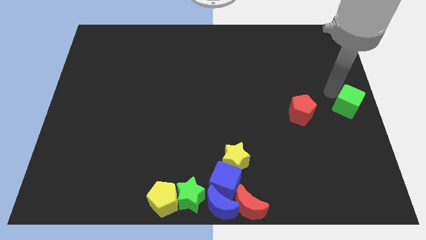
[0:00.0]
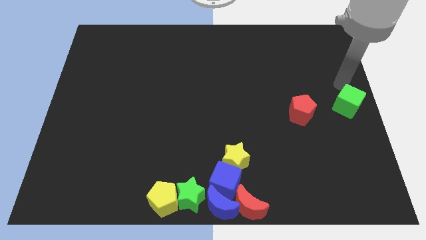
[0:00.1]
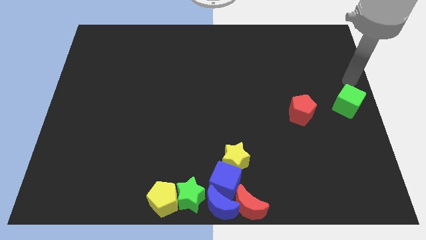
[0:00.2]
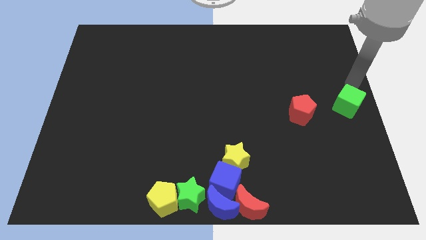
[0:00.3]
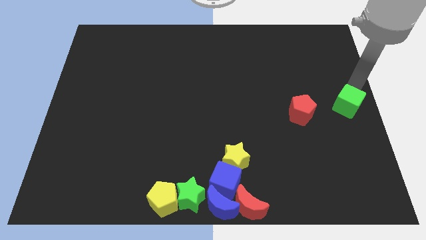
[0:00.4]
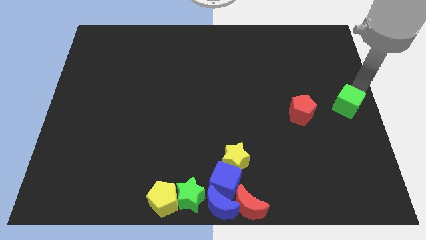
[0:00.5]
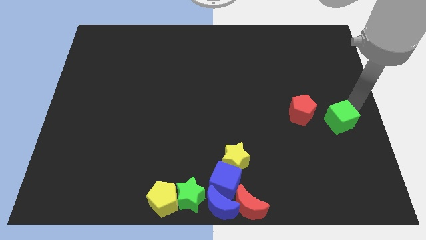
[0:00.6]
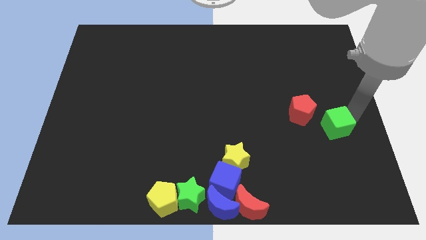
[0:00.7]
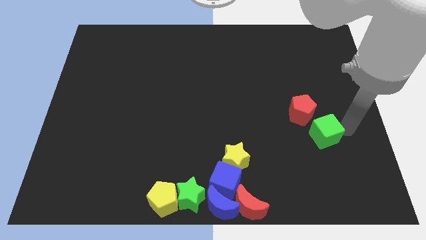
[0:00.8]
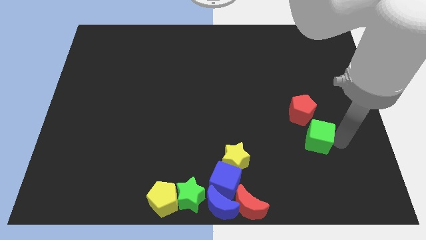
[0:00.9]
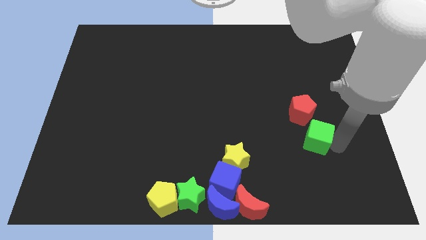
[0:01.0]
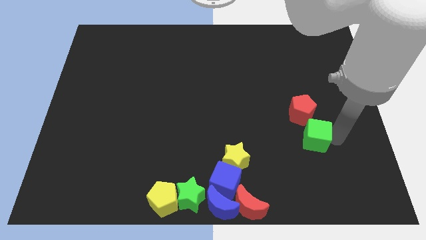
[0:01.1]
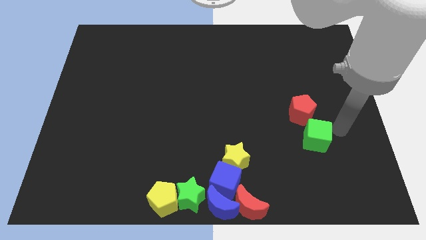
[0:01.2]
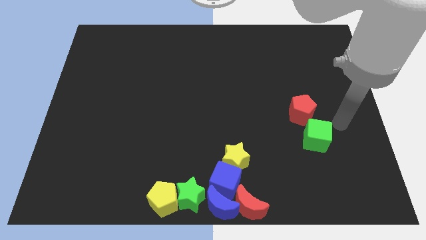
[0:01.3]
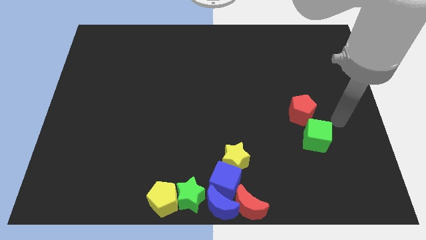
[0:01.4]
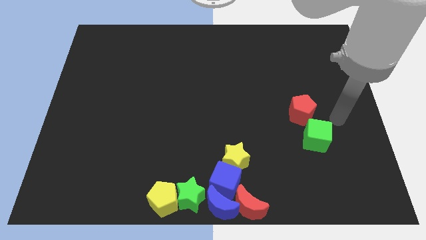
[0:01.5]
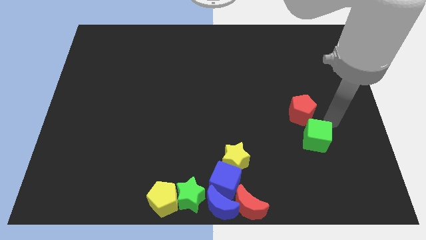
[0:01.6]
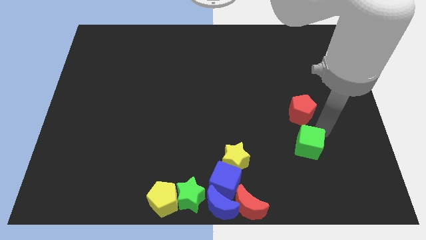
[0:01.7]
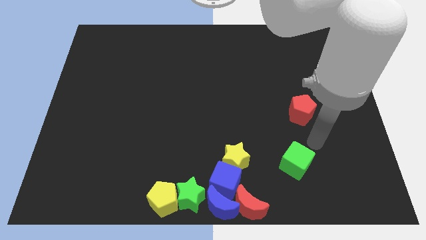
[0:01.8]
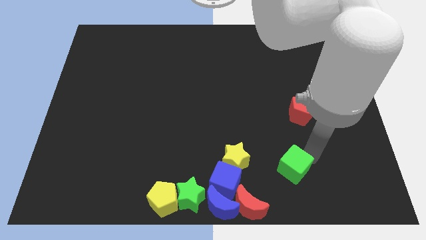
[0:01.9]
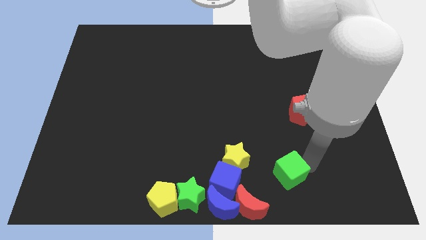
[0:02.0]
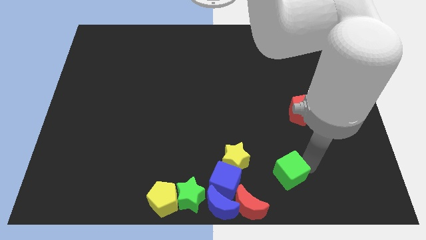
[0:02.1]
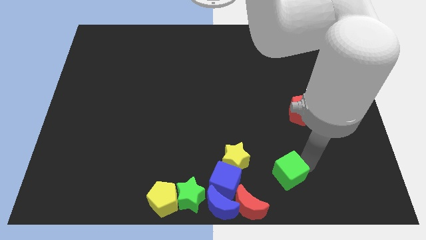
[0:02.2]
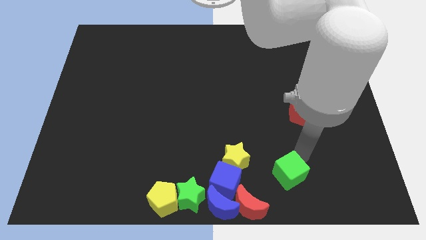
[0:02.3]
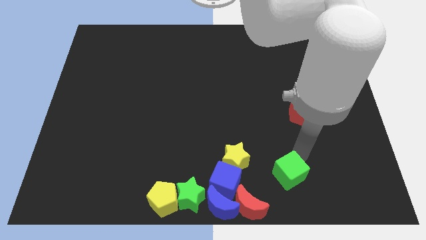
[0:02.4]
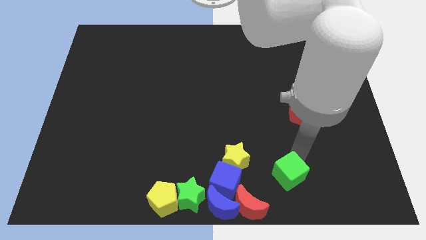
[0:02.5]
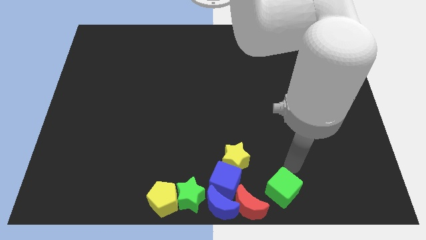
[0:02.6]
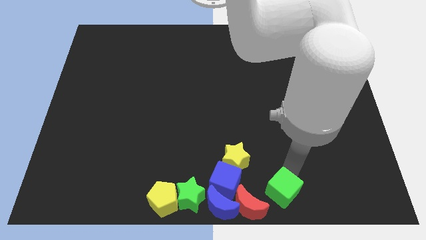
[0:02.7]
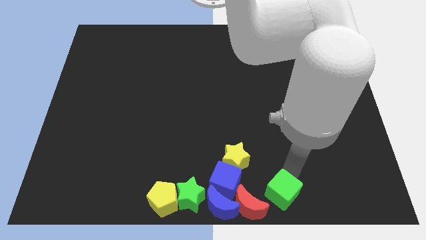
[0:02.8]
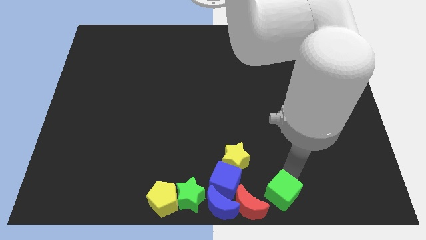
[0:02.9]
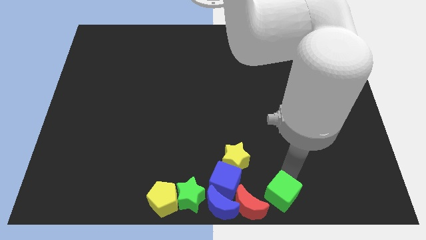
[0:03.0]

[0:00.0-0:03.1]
move green cube close to the red moon

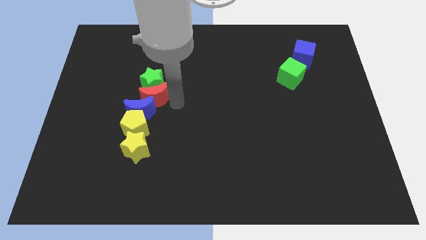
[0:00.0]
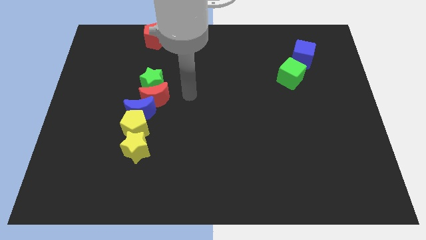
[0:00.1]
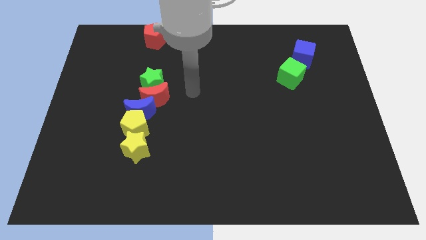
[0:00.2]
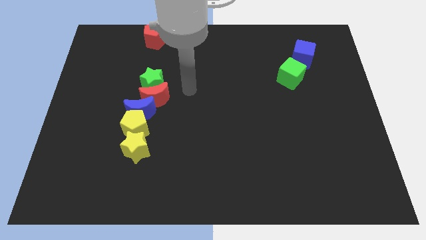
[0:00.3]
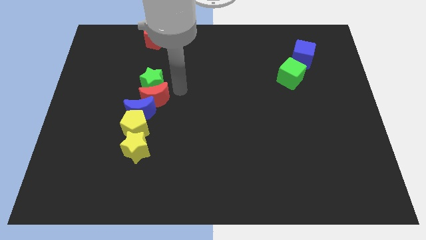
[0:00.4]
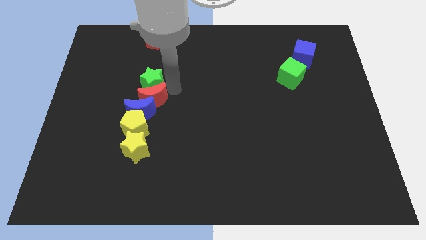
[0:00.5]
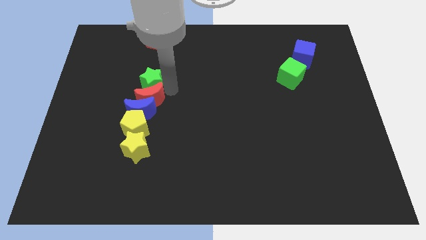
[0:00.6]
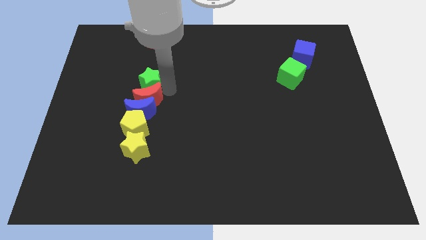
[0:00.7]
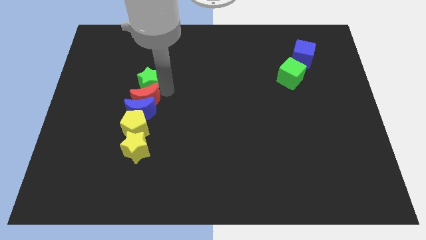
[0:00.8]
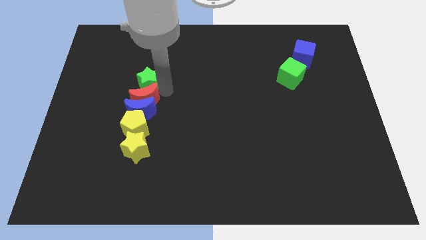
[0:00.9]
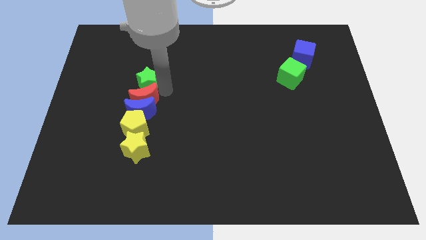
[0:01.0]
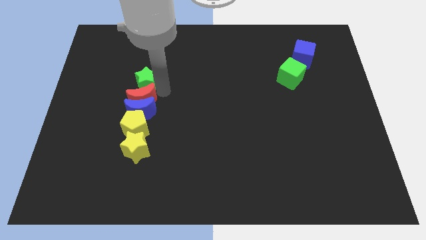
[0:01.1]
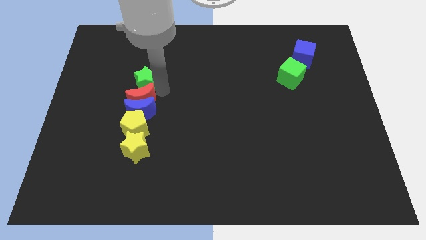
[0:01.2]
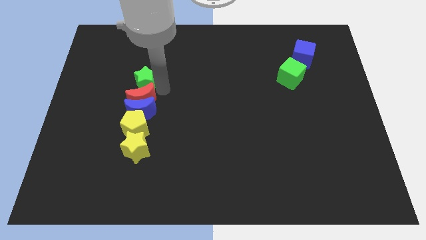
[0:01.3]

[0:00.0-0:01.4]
move the red moon slightly to the left

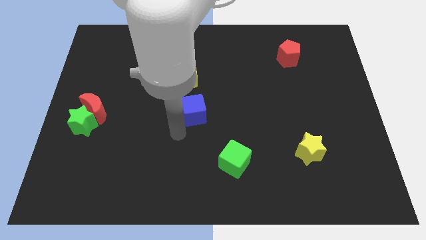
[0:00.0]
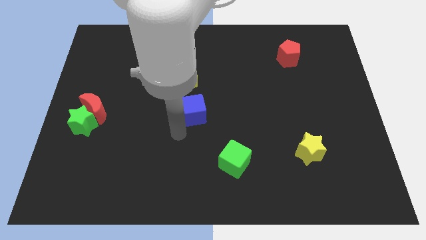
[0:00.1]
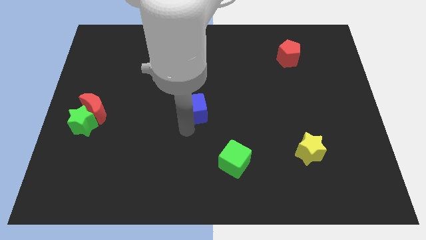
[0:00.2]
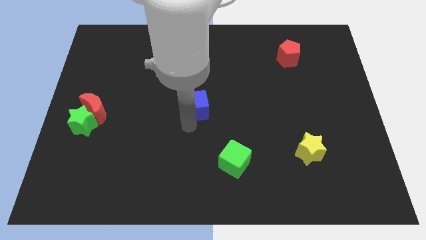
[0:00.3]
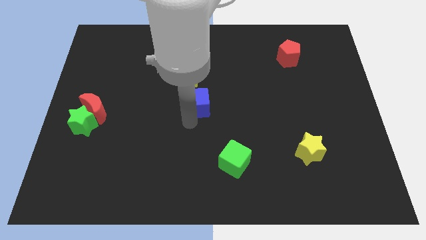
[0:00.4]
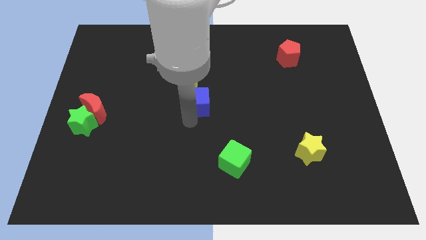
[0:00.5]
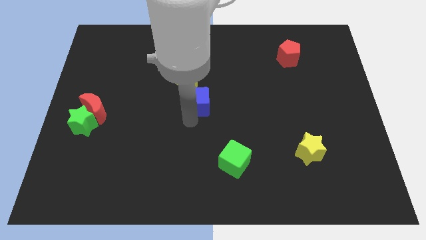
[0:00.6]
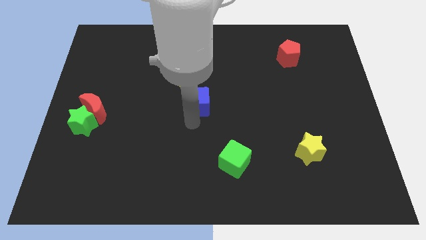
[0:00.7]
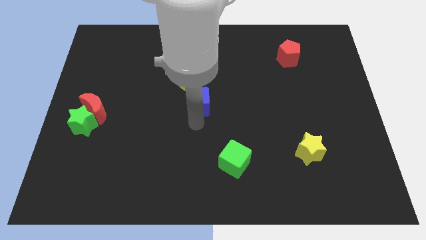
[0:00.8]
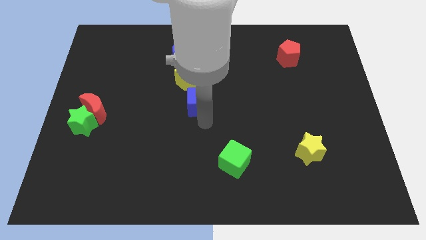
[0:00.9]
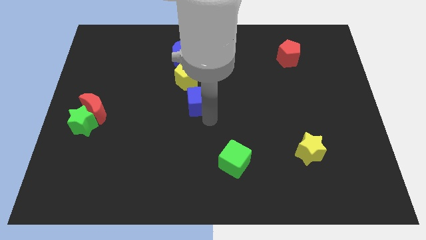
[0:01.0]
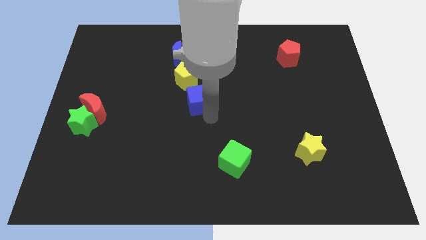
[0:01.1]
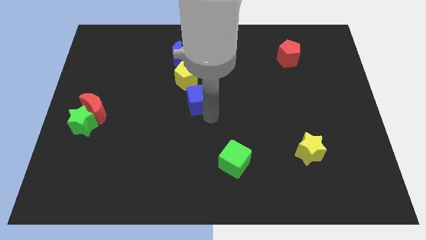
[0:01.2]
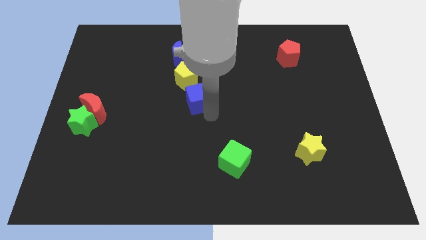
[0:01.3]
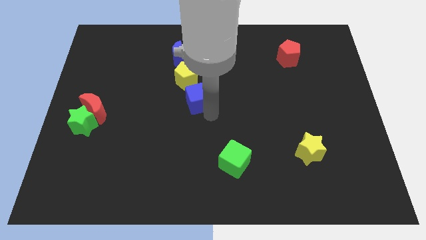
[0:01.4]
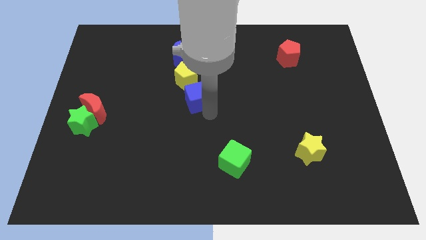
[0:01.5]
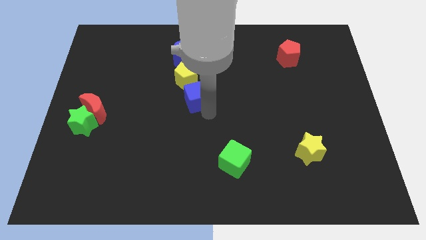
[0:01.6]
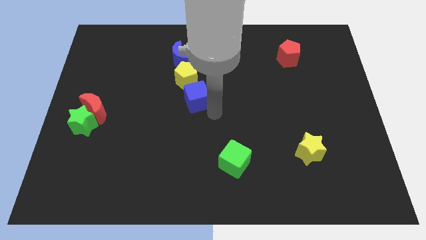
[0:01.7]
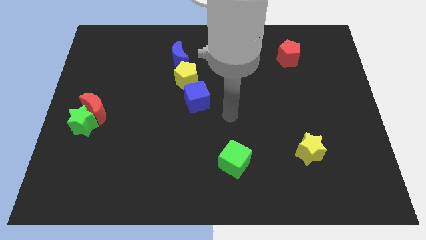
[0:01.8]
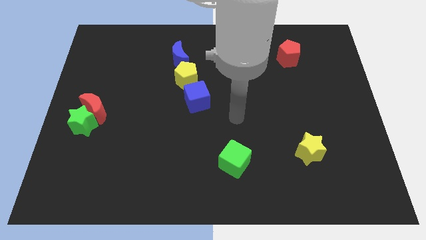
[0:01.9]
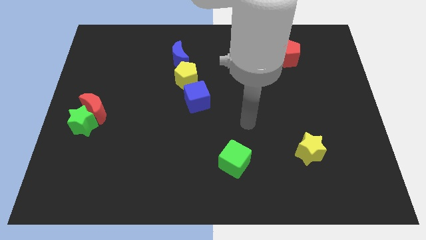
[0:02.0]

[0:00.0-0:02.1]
push the blue cube close to yellow pentagon

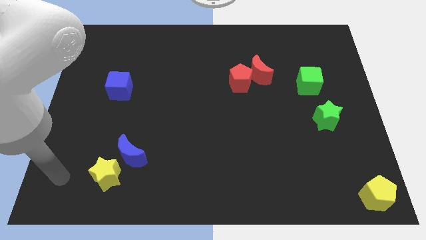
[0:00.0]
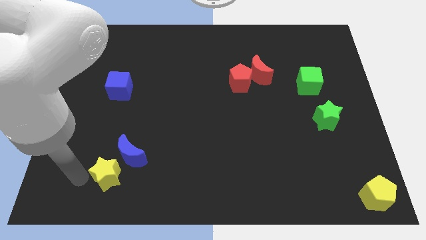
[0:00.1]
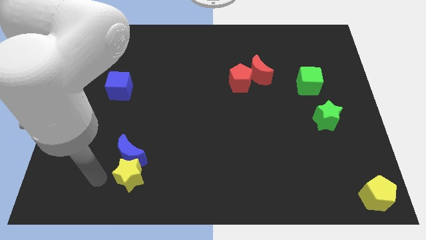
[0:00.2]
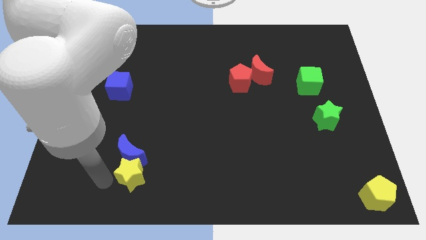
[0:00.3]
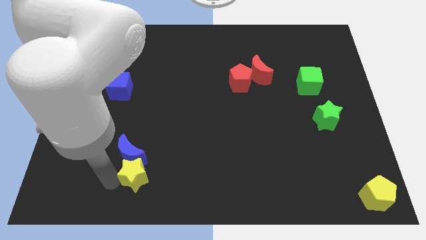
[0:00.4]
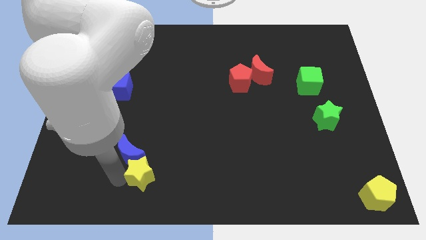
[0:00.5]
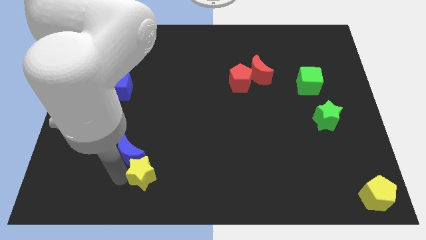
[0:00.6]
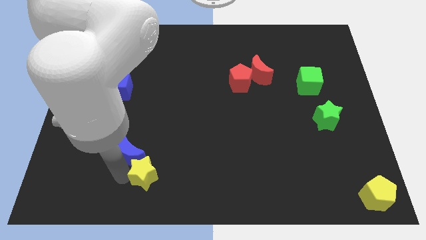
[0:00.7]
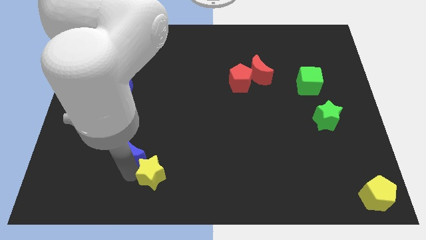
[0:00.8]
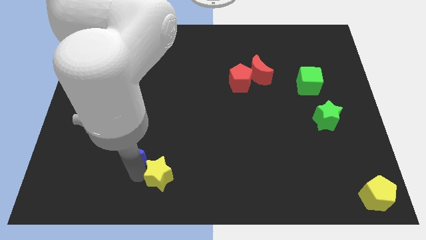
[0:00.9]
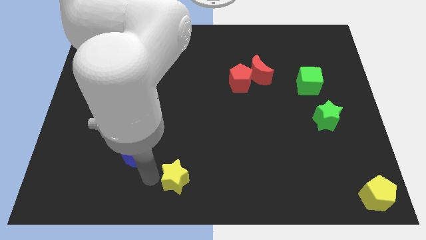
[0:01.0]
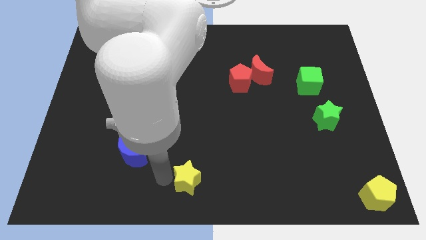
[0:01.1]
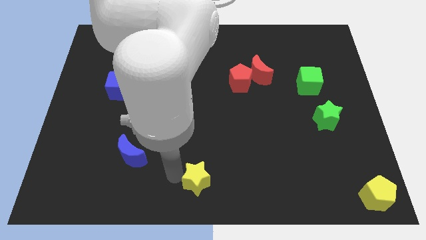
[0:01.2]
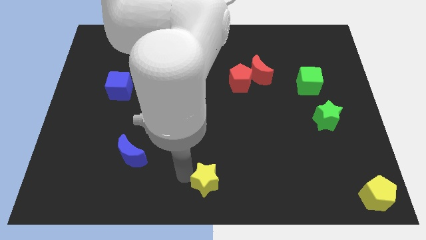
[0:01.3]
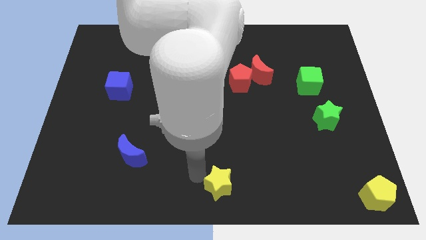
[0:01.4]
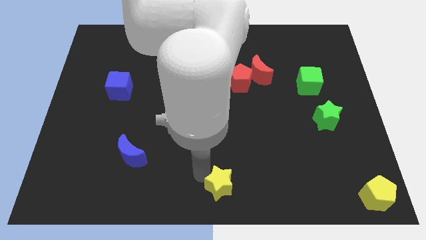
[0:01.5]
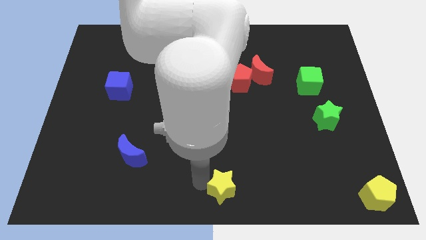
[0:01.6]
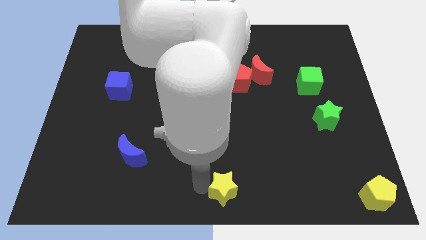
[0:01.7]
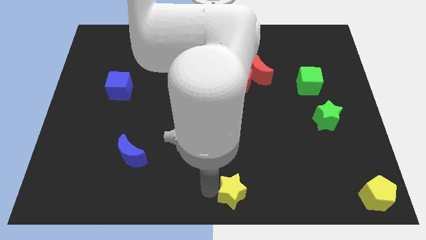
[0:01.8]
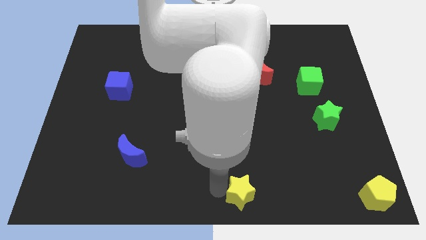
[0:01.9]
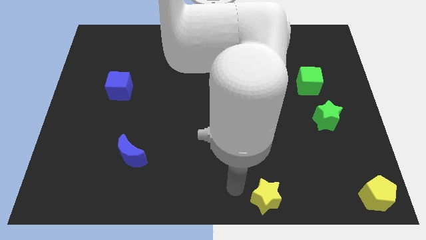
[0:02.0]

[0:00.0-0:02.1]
push the yellow star to the bottom side of the board

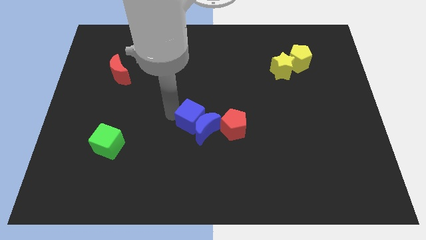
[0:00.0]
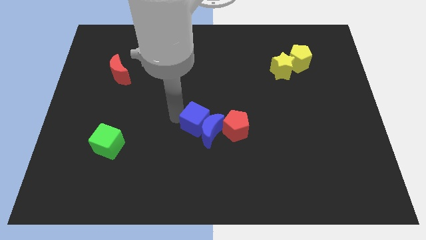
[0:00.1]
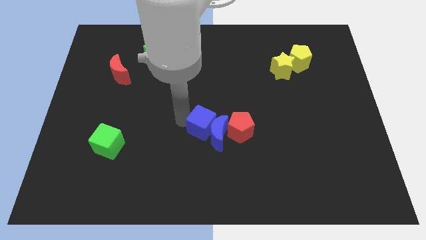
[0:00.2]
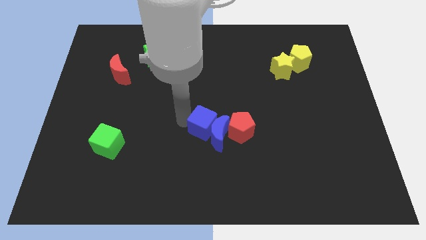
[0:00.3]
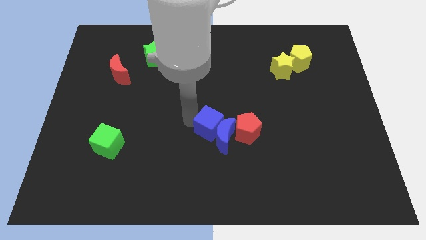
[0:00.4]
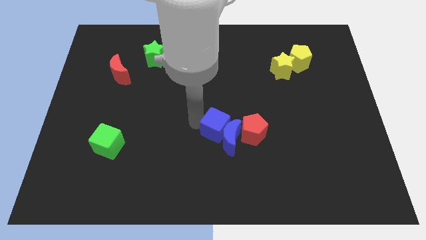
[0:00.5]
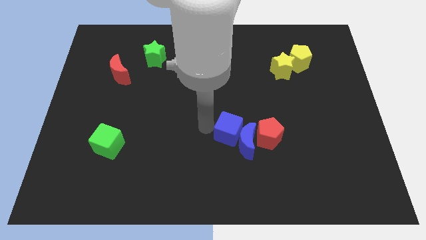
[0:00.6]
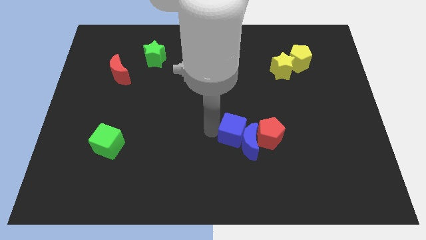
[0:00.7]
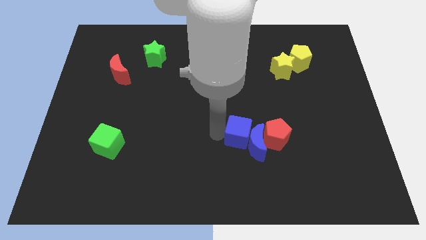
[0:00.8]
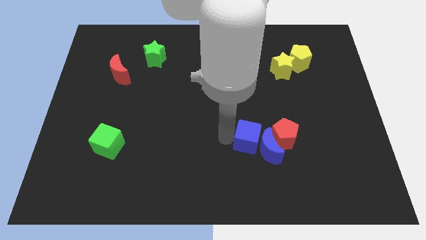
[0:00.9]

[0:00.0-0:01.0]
push blue cubes in red pentagon
